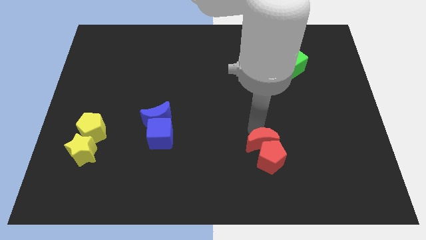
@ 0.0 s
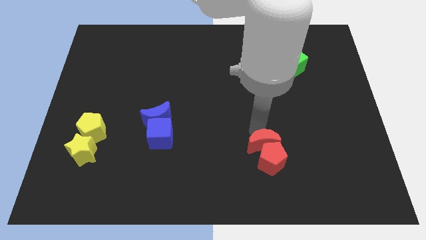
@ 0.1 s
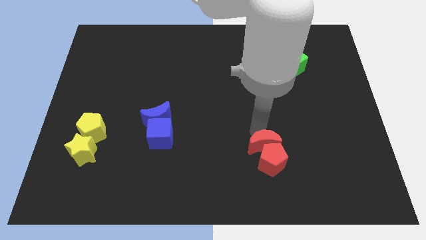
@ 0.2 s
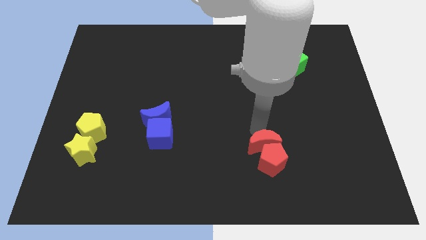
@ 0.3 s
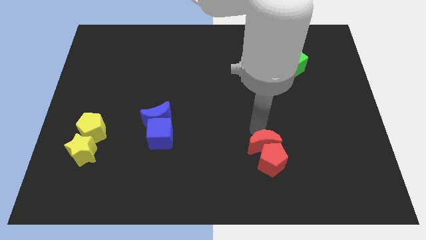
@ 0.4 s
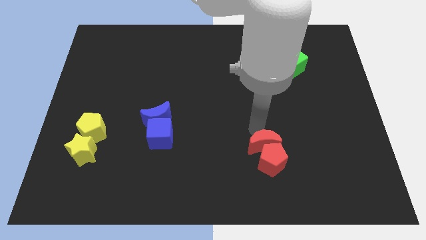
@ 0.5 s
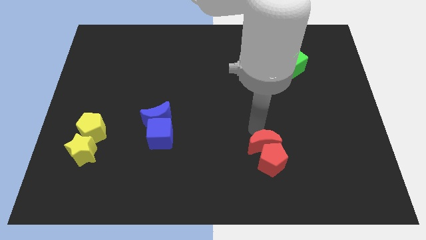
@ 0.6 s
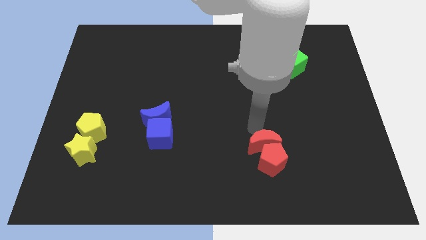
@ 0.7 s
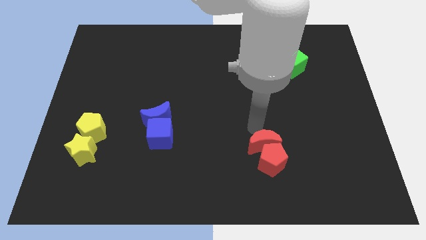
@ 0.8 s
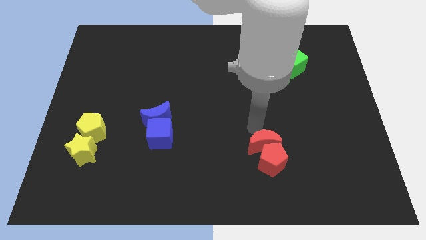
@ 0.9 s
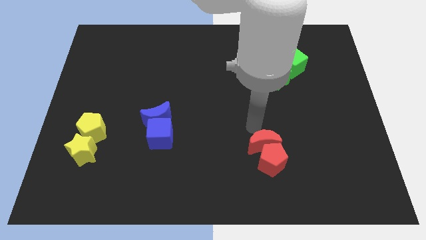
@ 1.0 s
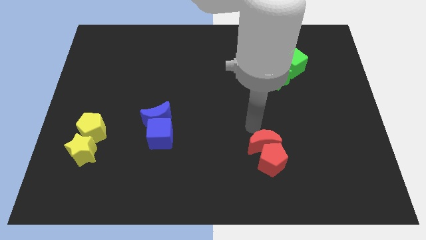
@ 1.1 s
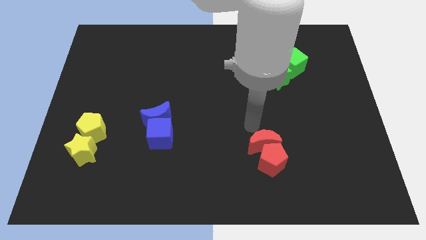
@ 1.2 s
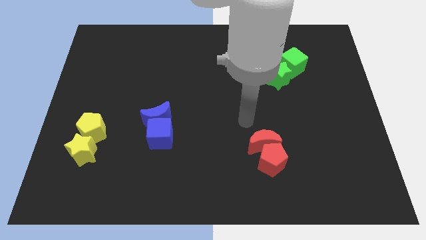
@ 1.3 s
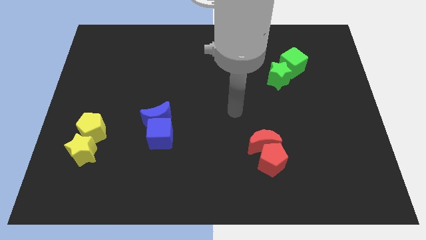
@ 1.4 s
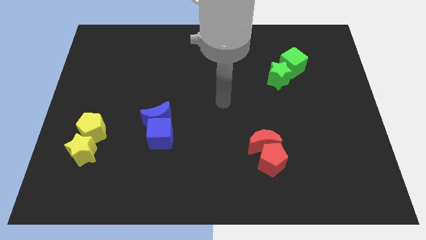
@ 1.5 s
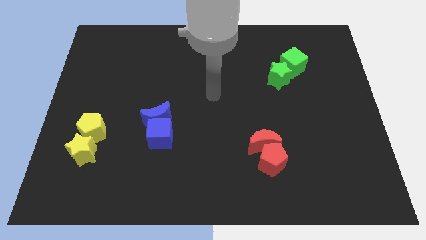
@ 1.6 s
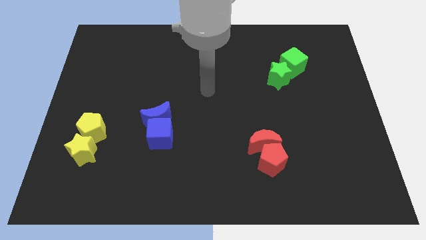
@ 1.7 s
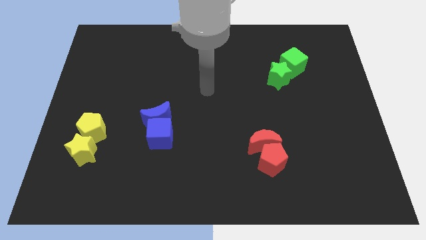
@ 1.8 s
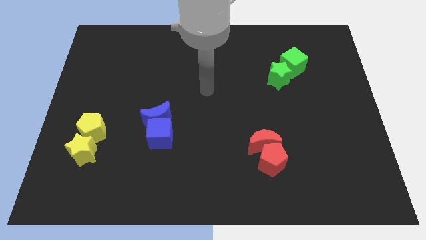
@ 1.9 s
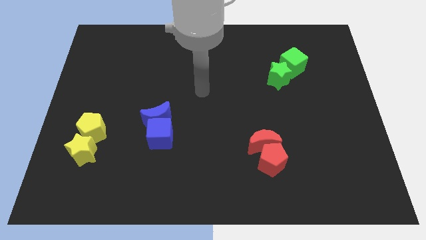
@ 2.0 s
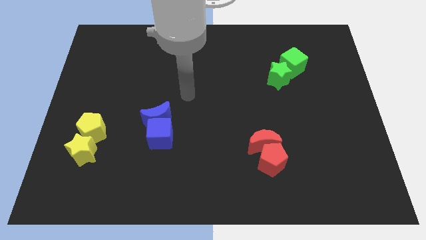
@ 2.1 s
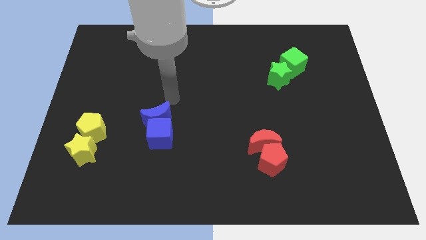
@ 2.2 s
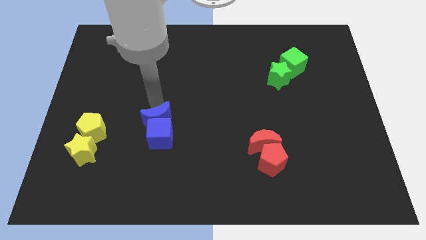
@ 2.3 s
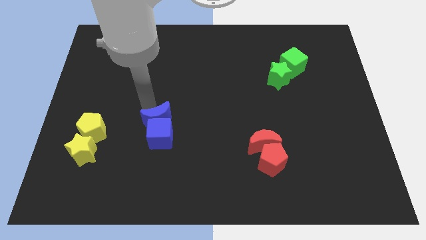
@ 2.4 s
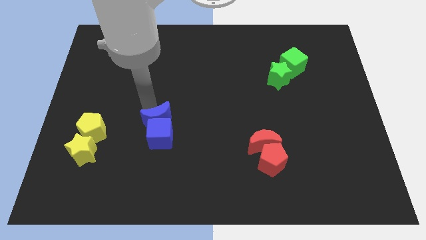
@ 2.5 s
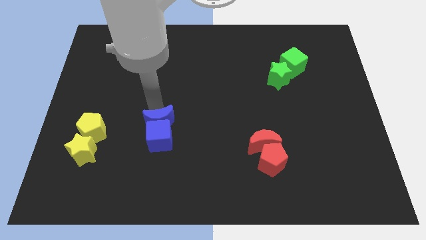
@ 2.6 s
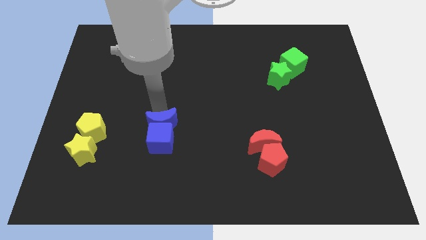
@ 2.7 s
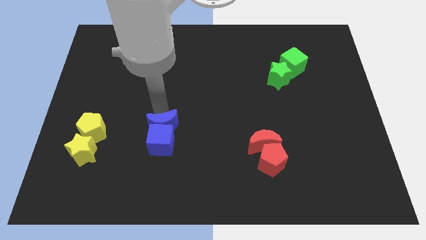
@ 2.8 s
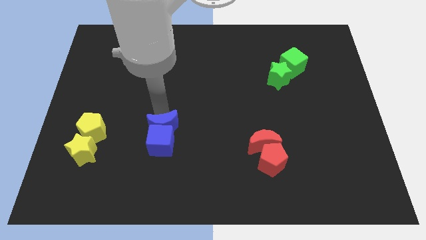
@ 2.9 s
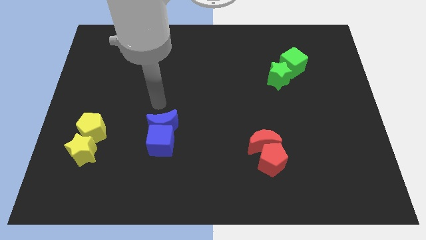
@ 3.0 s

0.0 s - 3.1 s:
slightly push the blue crescent and blue cube to the right of the yellow blocks

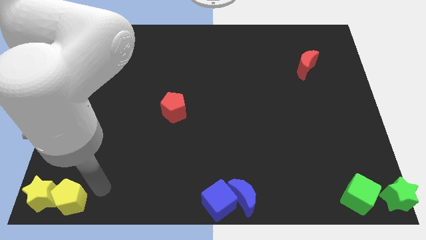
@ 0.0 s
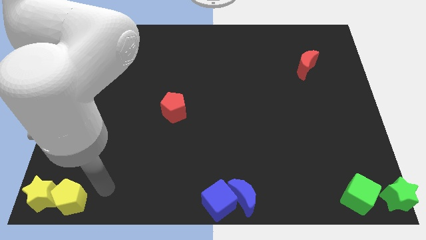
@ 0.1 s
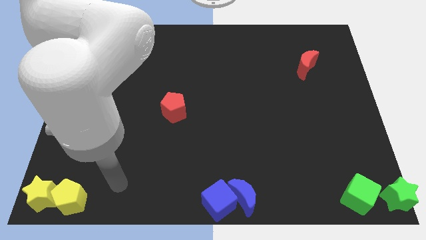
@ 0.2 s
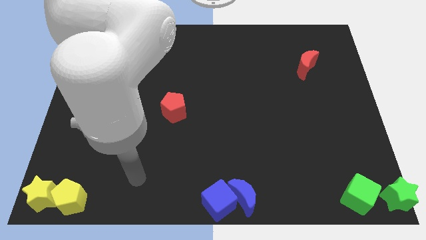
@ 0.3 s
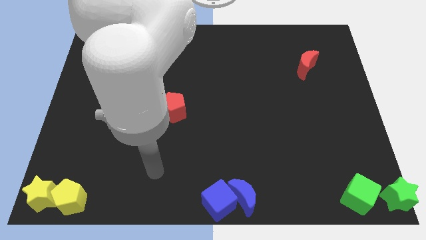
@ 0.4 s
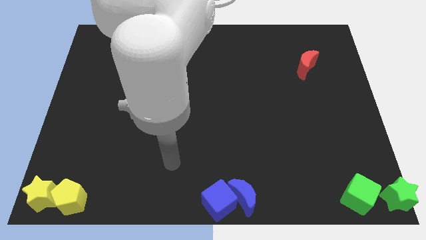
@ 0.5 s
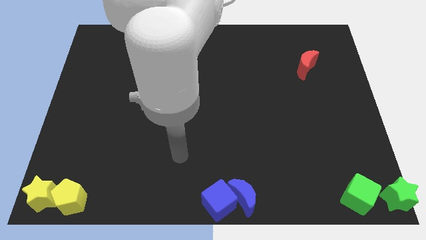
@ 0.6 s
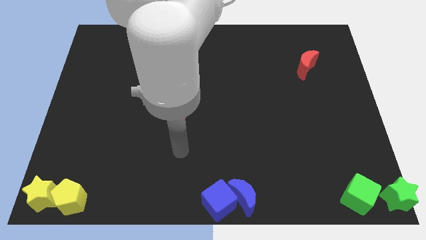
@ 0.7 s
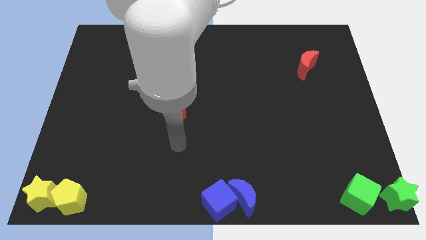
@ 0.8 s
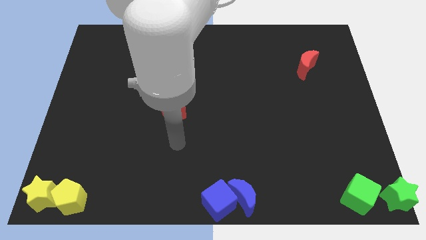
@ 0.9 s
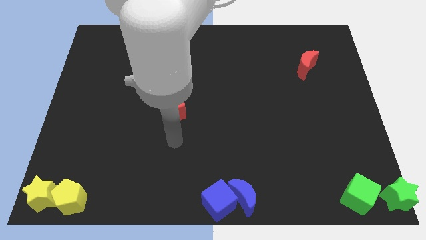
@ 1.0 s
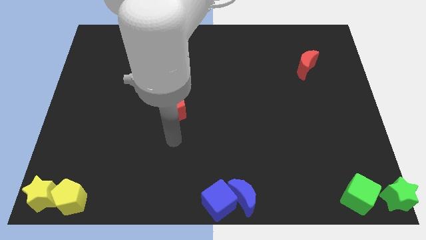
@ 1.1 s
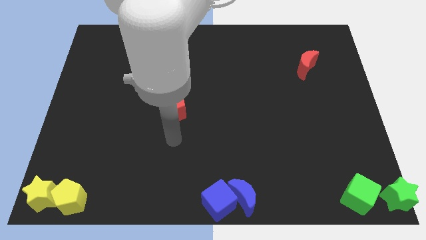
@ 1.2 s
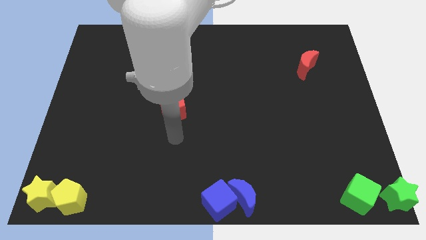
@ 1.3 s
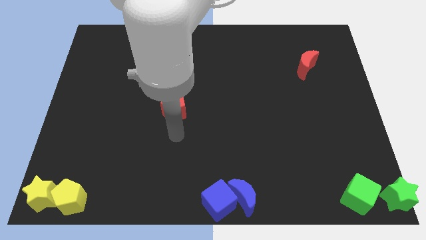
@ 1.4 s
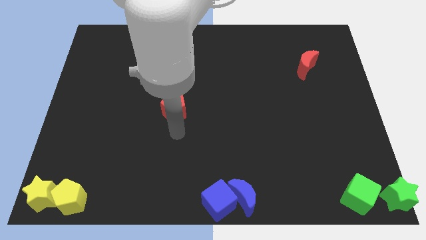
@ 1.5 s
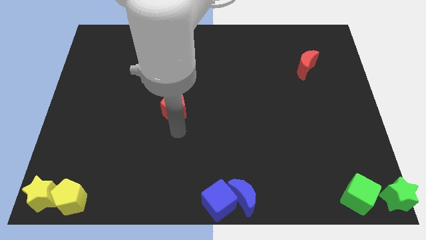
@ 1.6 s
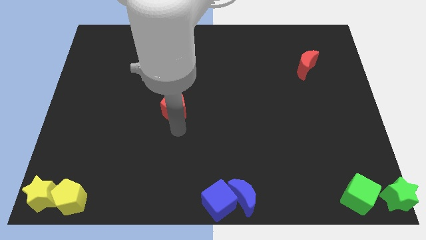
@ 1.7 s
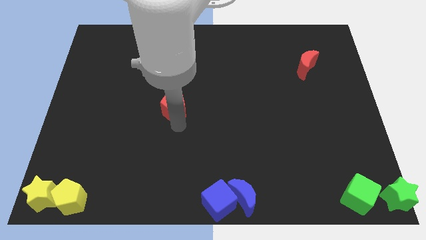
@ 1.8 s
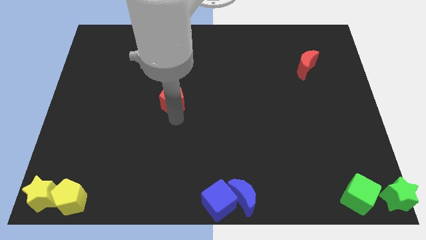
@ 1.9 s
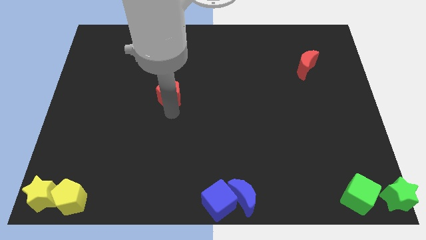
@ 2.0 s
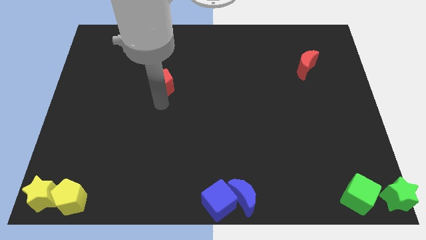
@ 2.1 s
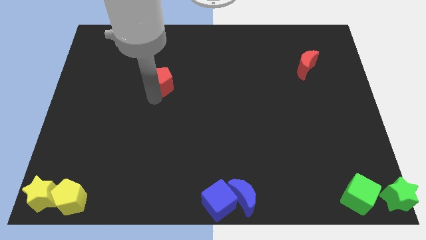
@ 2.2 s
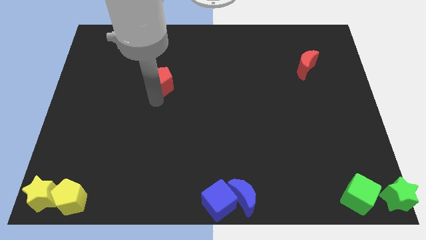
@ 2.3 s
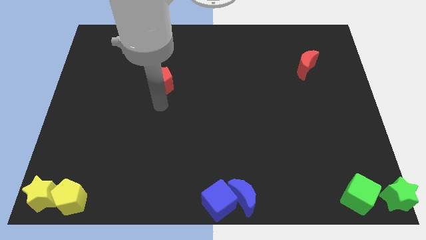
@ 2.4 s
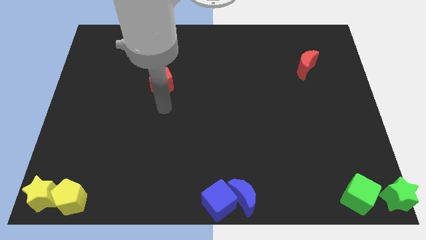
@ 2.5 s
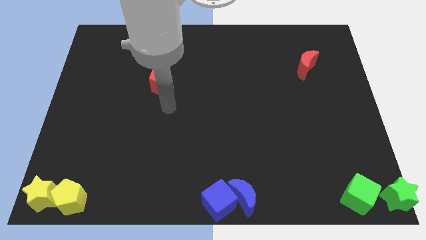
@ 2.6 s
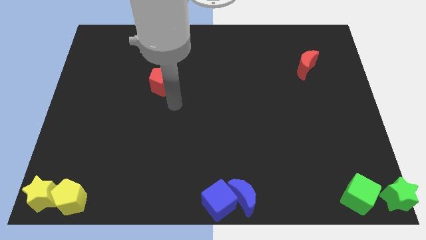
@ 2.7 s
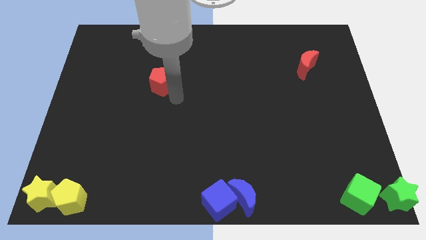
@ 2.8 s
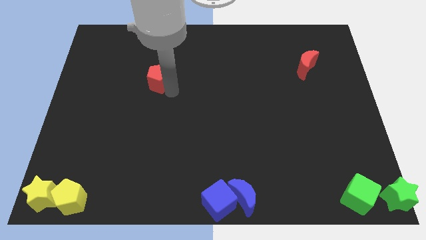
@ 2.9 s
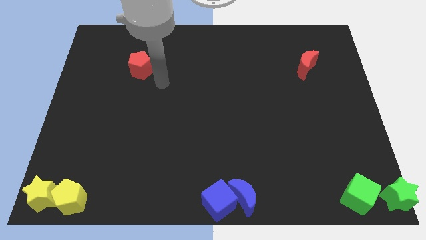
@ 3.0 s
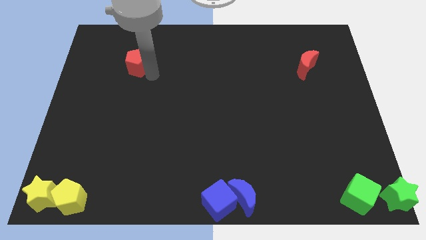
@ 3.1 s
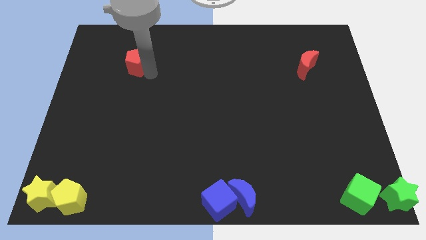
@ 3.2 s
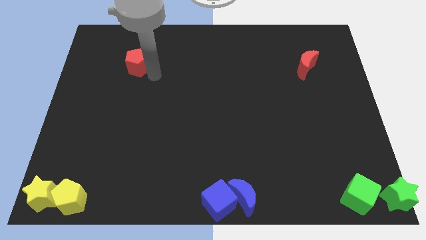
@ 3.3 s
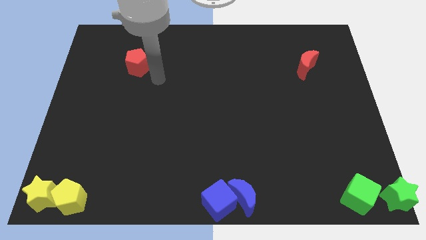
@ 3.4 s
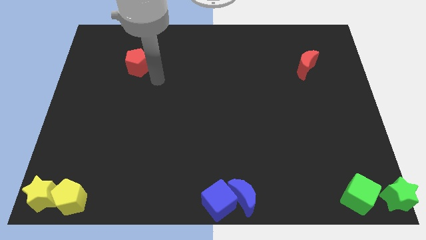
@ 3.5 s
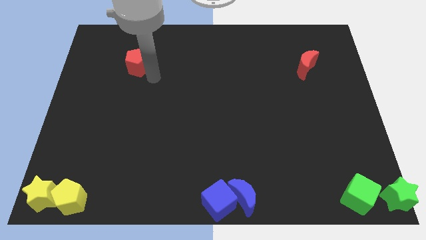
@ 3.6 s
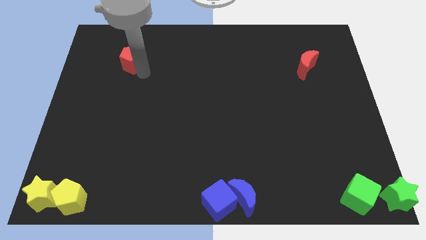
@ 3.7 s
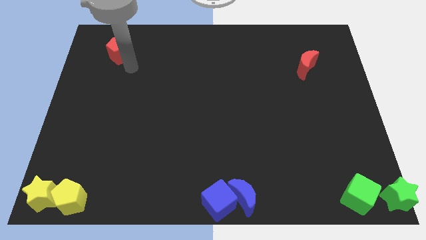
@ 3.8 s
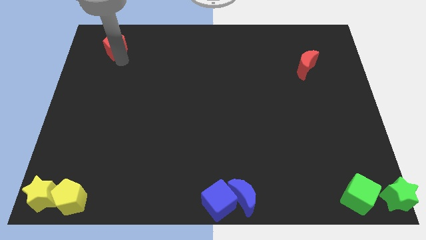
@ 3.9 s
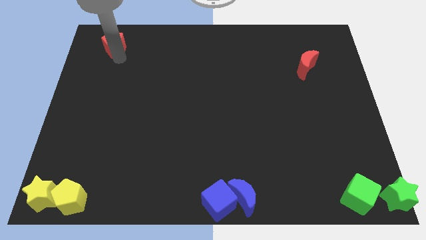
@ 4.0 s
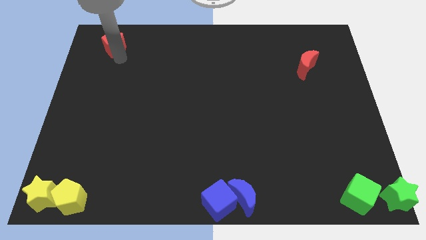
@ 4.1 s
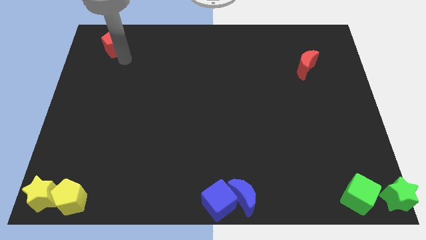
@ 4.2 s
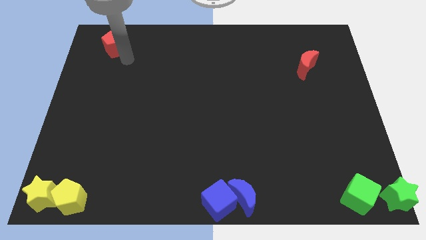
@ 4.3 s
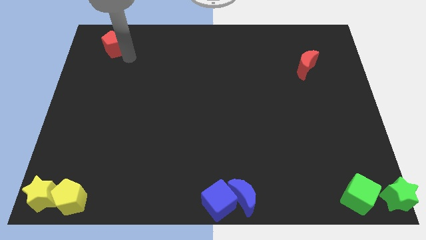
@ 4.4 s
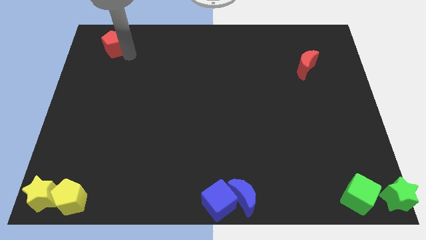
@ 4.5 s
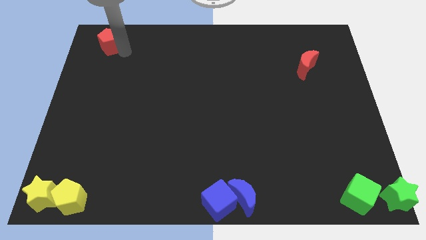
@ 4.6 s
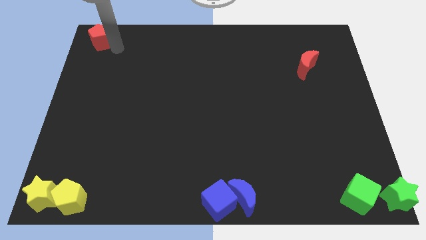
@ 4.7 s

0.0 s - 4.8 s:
drag the red pentagon towards the top left corner of the board

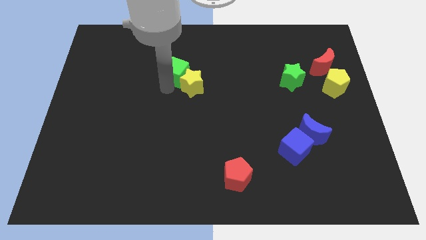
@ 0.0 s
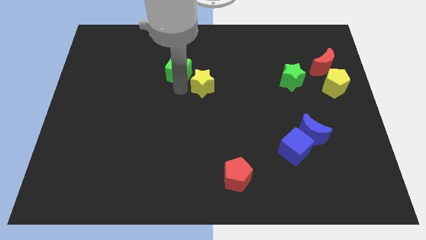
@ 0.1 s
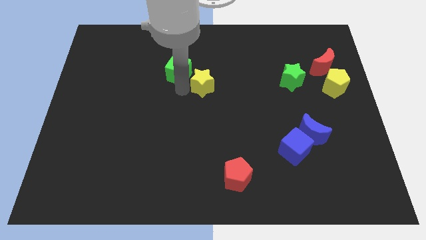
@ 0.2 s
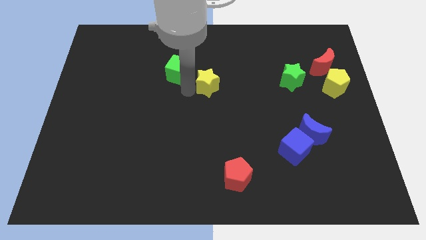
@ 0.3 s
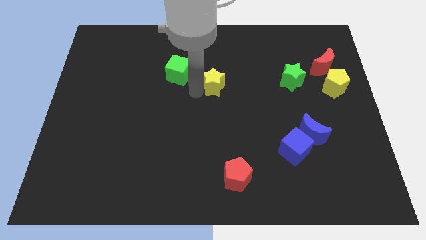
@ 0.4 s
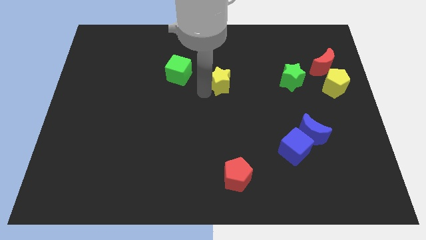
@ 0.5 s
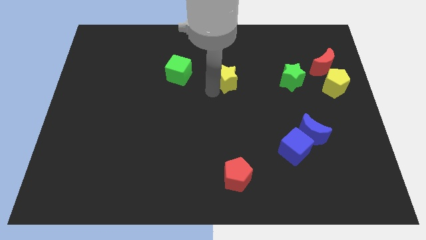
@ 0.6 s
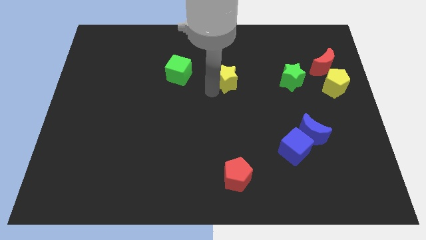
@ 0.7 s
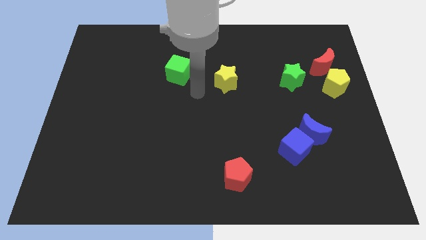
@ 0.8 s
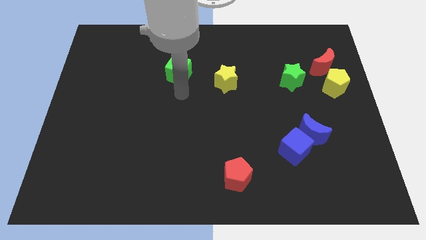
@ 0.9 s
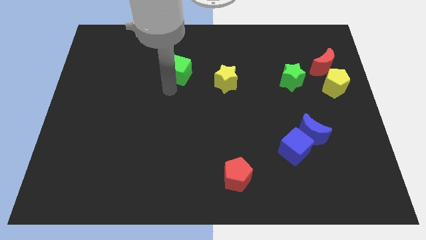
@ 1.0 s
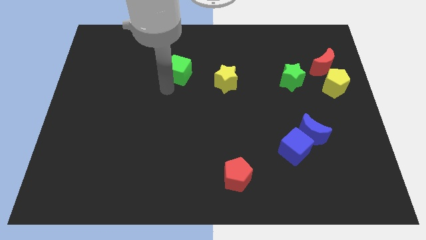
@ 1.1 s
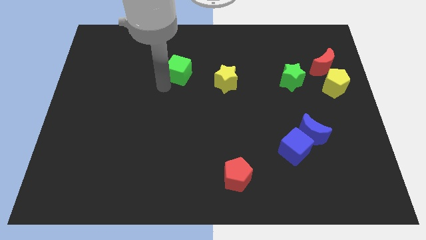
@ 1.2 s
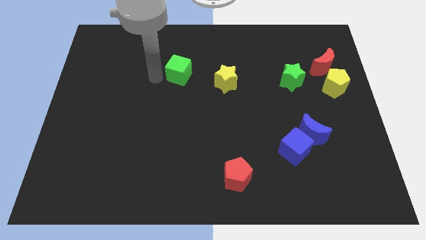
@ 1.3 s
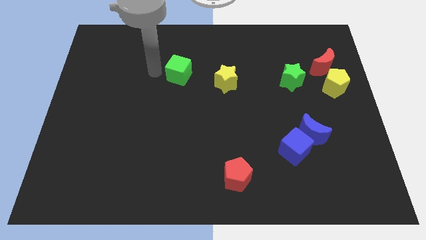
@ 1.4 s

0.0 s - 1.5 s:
separate the yellow star from the green cube
